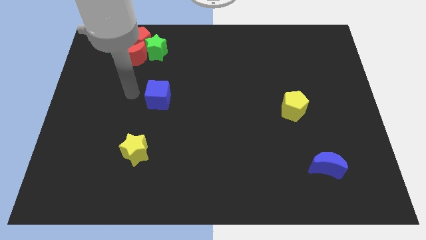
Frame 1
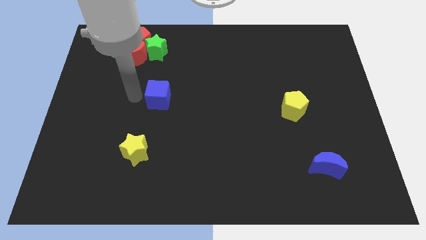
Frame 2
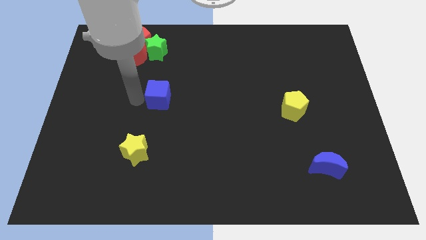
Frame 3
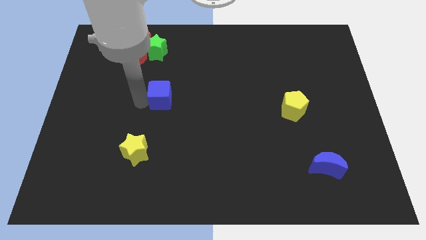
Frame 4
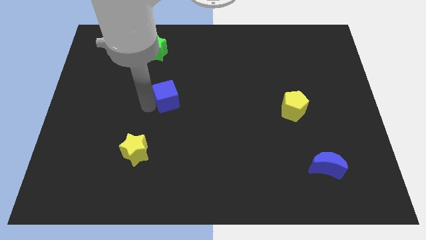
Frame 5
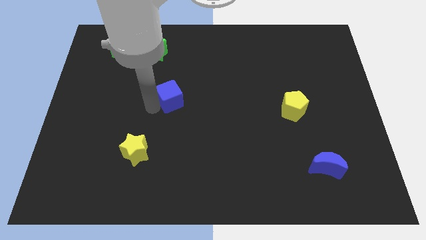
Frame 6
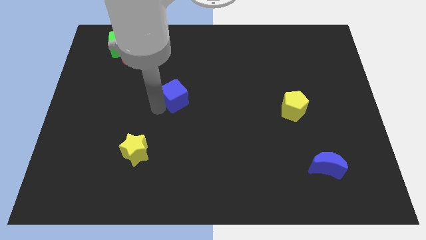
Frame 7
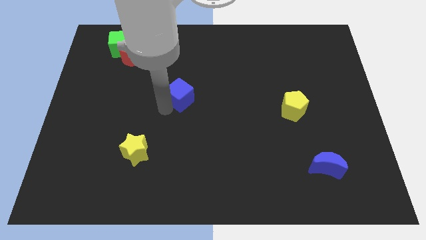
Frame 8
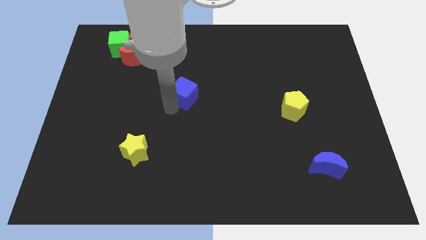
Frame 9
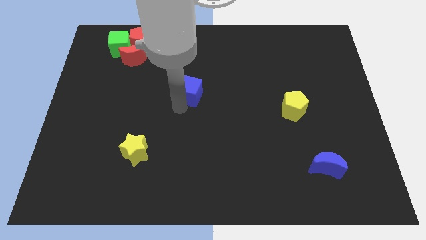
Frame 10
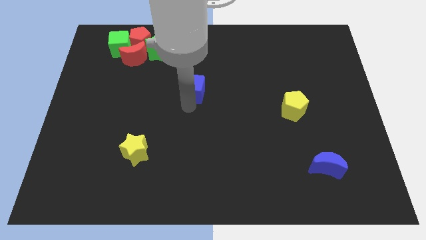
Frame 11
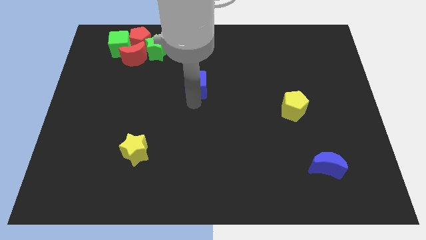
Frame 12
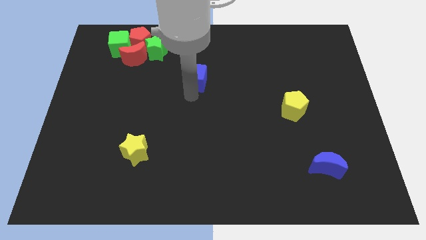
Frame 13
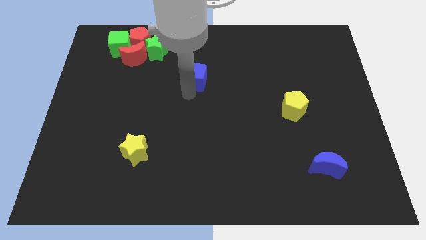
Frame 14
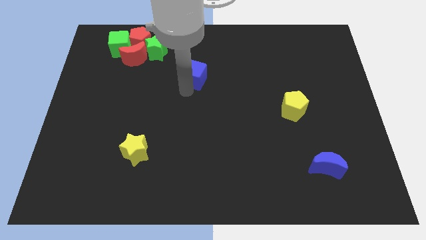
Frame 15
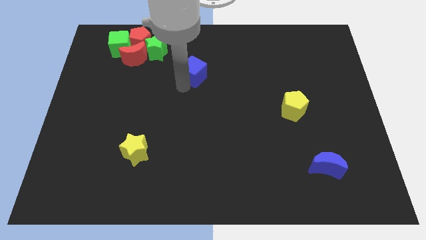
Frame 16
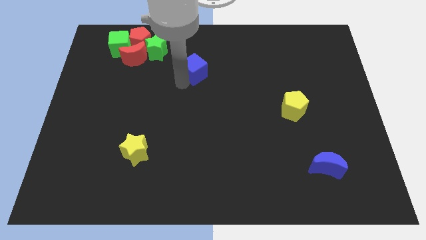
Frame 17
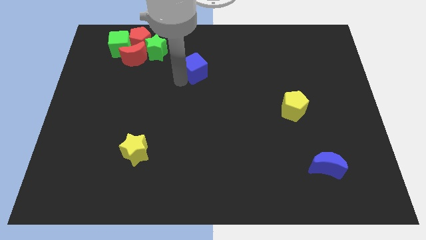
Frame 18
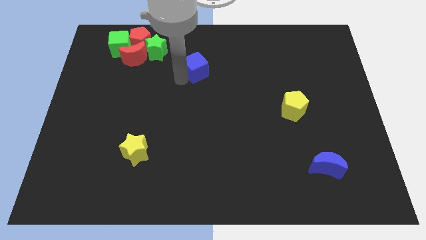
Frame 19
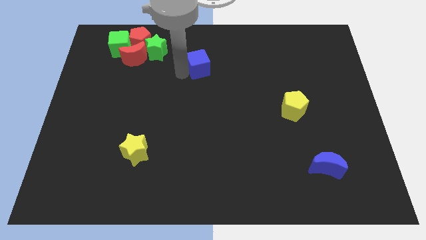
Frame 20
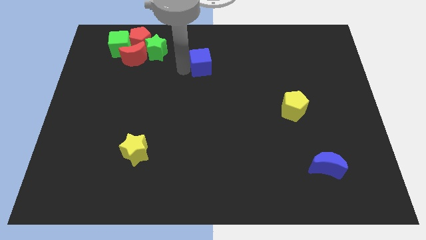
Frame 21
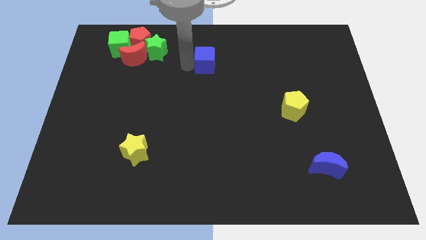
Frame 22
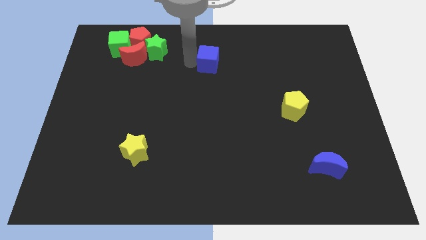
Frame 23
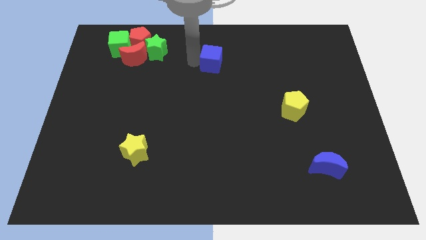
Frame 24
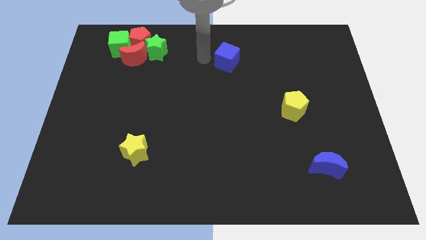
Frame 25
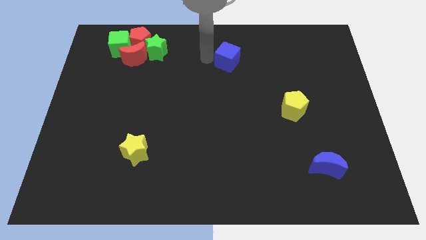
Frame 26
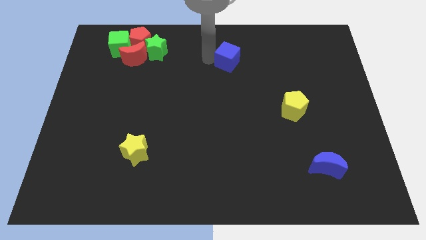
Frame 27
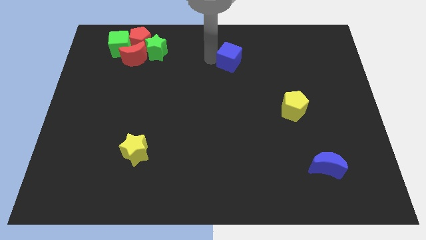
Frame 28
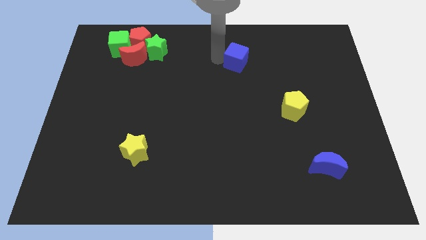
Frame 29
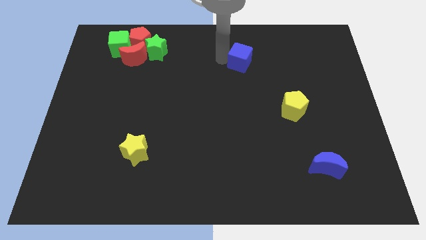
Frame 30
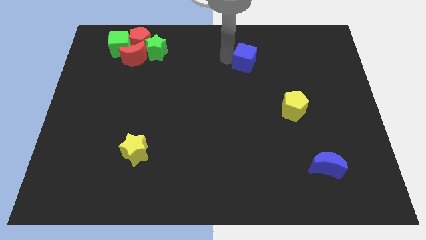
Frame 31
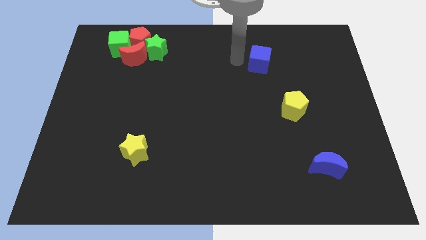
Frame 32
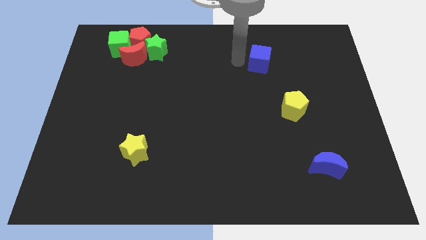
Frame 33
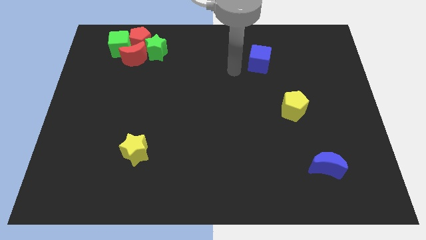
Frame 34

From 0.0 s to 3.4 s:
push the blue cube to the top

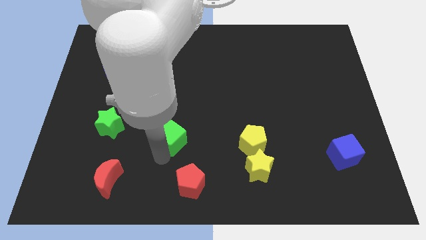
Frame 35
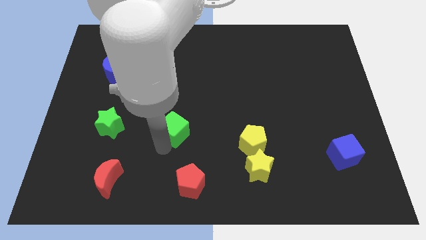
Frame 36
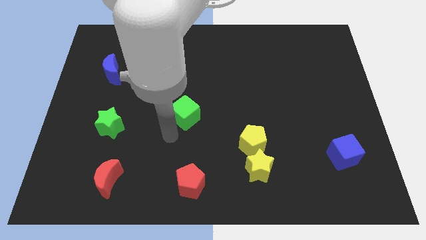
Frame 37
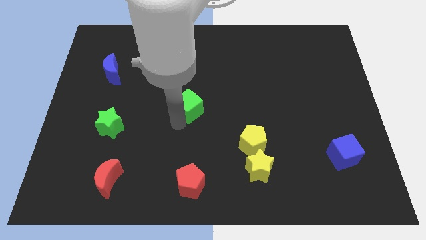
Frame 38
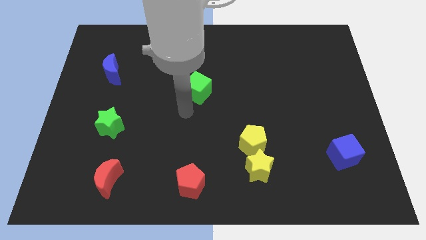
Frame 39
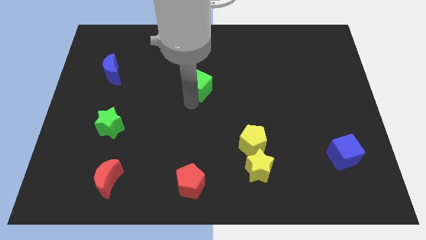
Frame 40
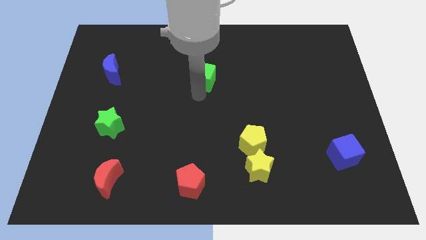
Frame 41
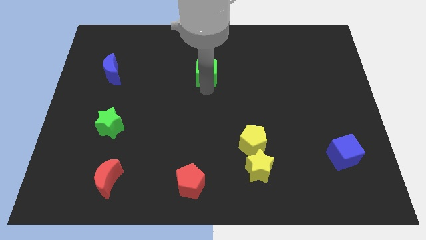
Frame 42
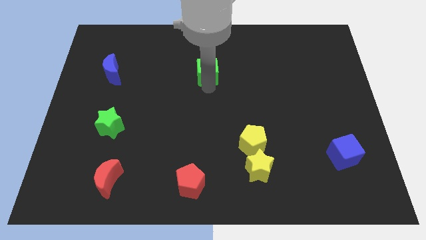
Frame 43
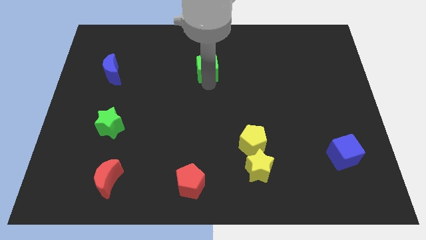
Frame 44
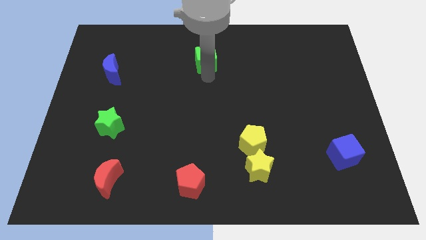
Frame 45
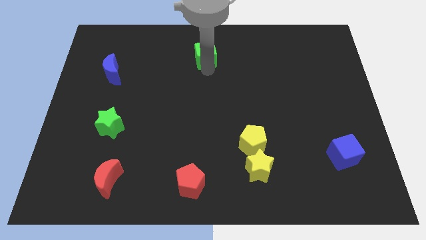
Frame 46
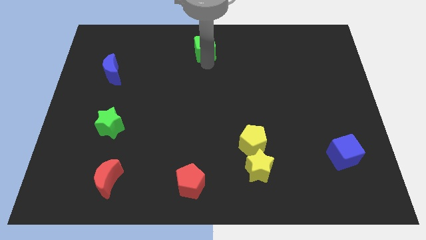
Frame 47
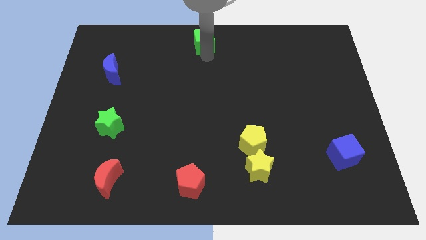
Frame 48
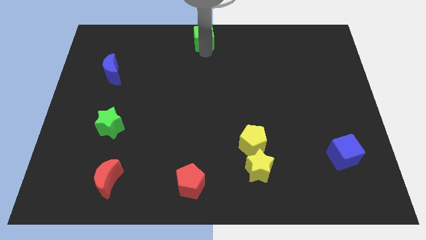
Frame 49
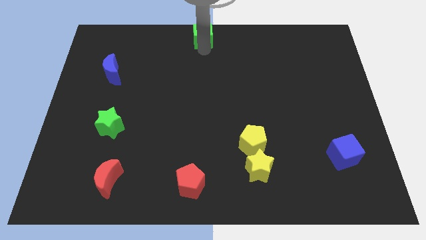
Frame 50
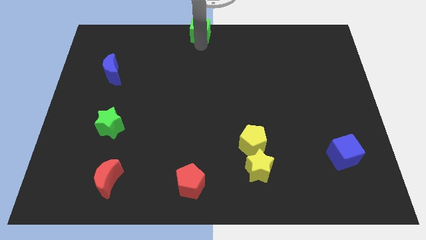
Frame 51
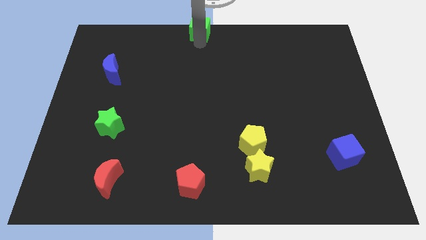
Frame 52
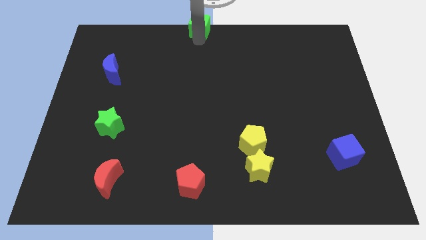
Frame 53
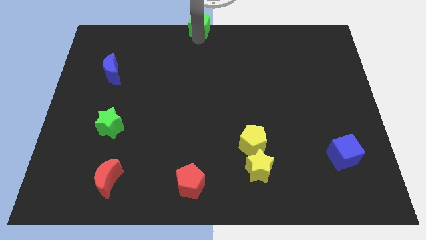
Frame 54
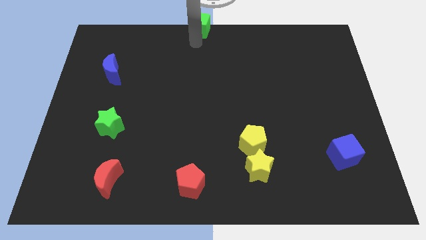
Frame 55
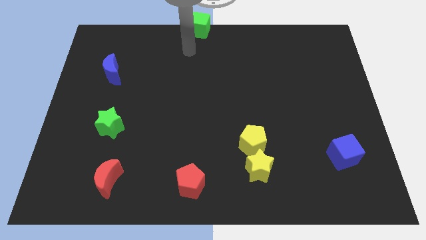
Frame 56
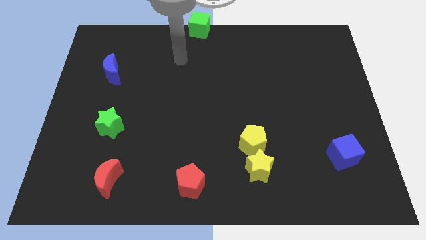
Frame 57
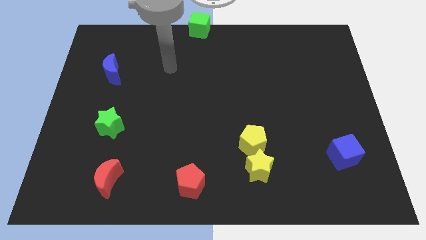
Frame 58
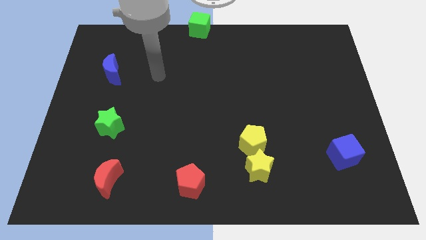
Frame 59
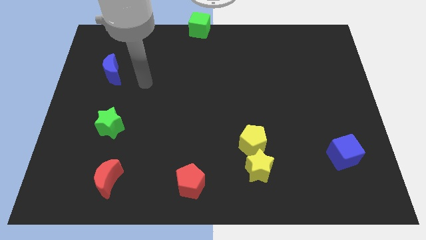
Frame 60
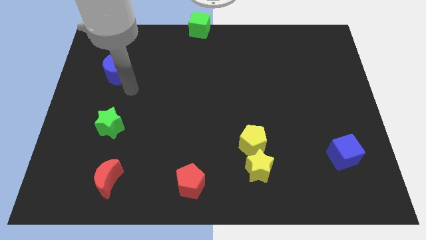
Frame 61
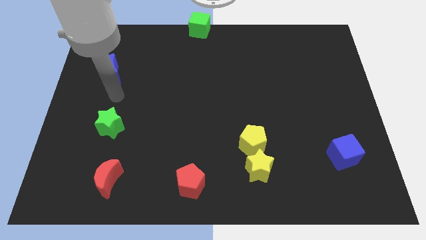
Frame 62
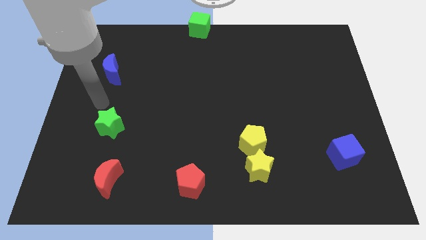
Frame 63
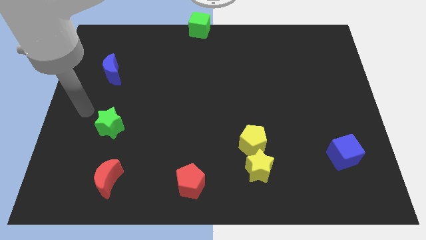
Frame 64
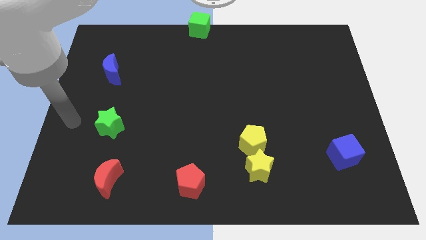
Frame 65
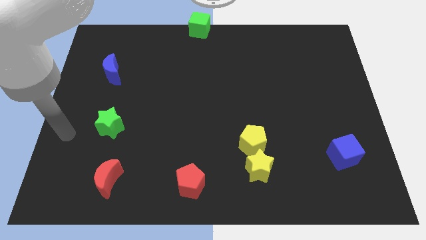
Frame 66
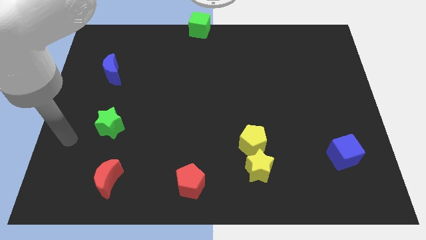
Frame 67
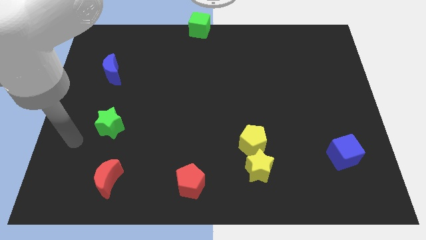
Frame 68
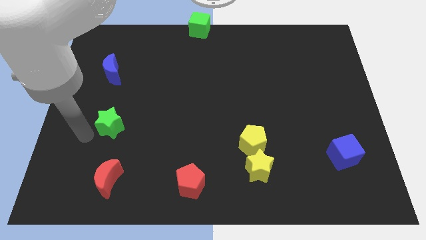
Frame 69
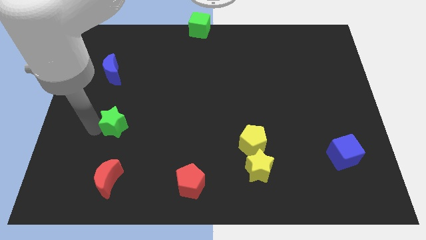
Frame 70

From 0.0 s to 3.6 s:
move the green cube to the top center of the board

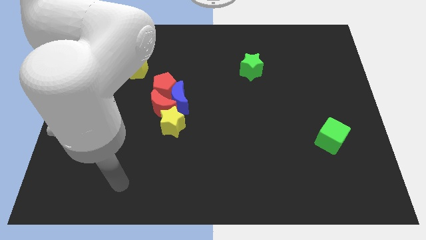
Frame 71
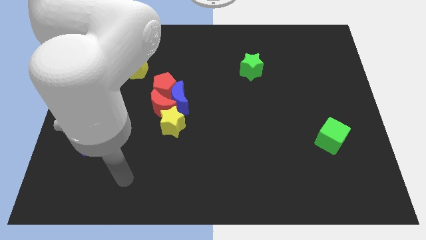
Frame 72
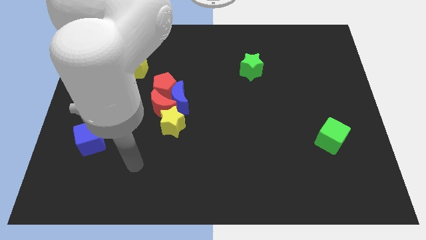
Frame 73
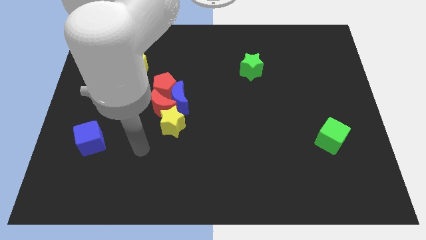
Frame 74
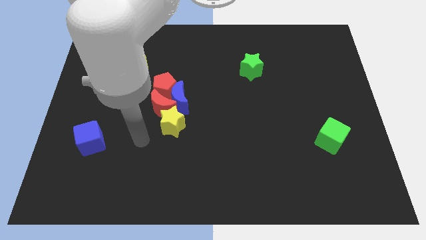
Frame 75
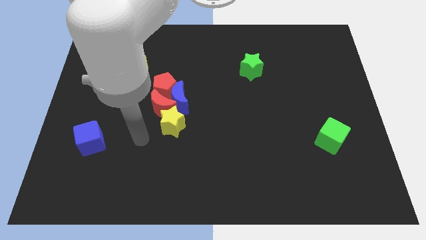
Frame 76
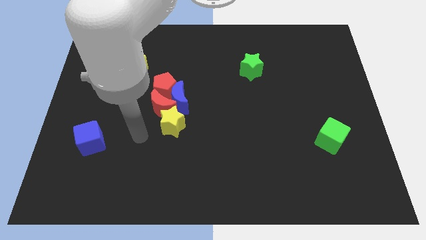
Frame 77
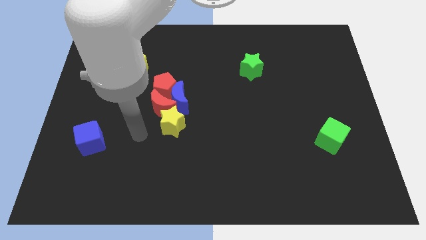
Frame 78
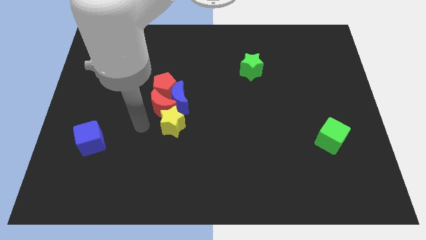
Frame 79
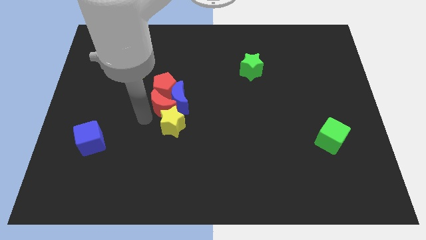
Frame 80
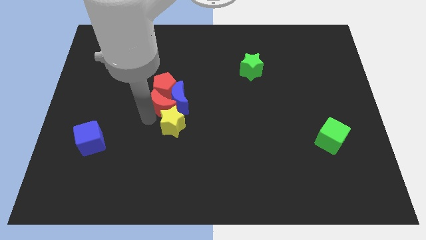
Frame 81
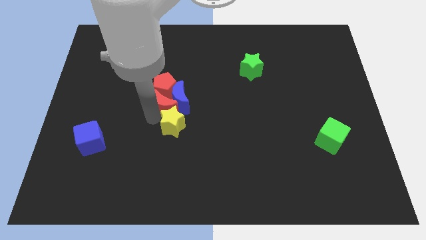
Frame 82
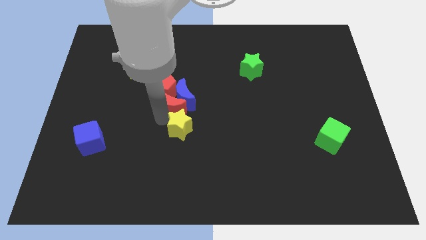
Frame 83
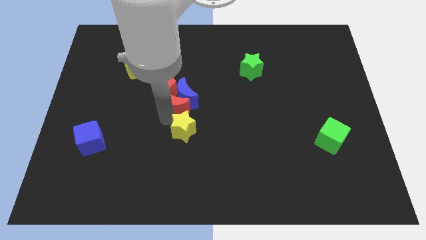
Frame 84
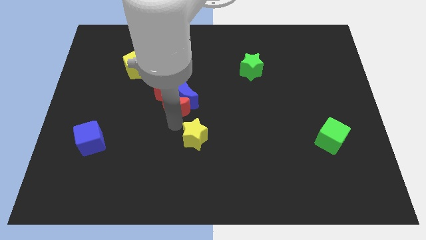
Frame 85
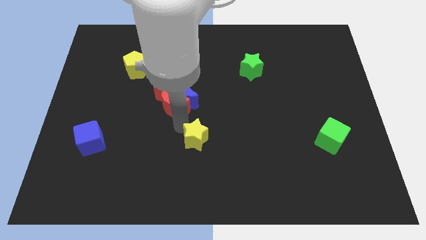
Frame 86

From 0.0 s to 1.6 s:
go and separate the yellow star from the red crescent

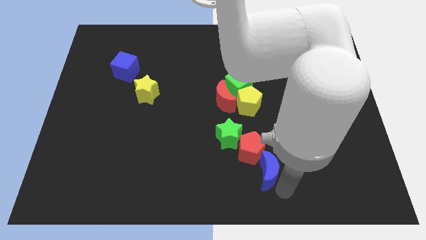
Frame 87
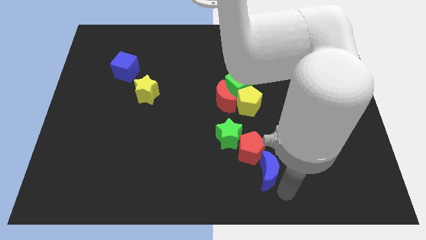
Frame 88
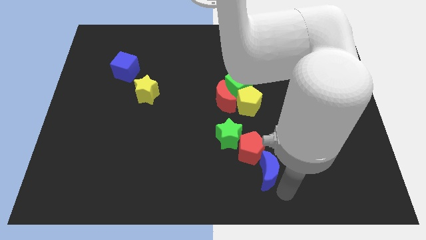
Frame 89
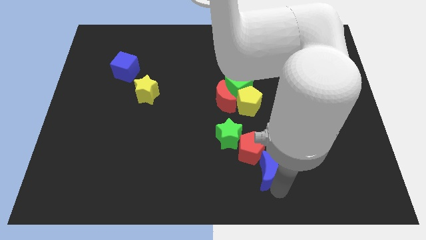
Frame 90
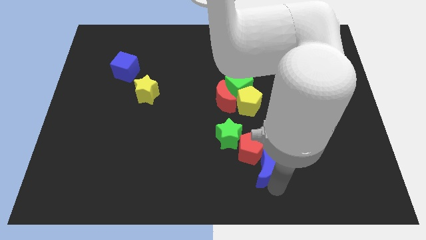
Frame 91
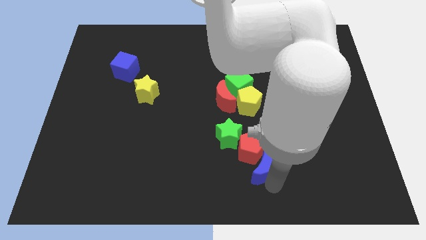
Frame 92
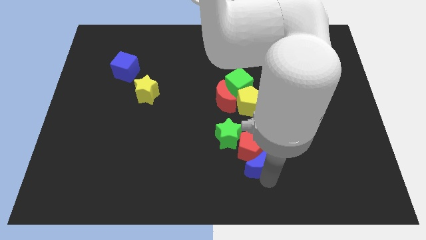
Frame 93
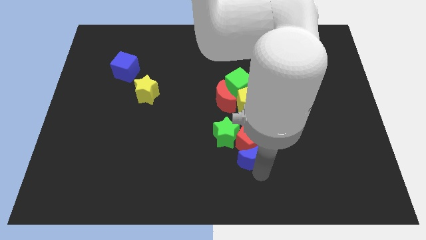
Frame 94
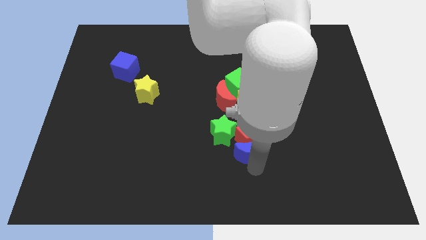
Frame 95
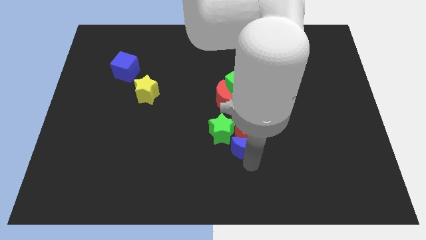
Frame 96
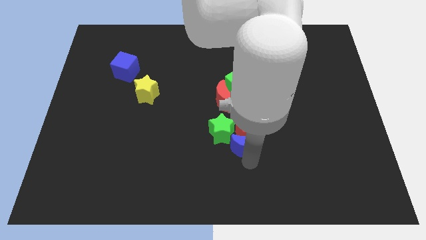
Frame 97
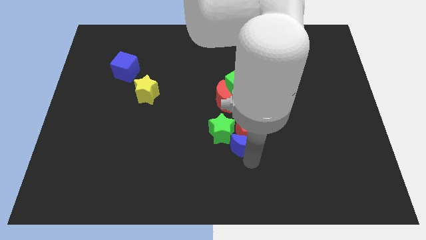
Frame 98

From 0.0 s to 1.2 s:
push blue moon into the red pentagon
